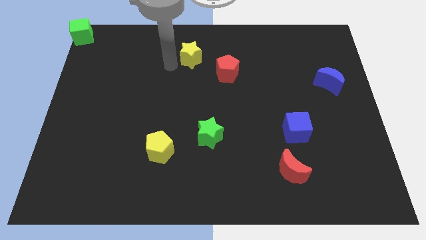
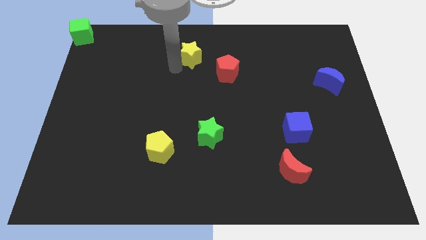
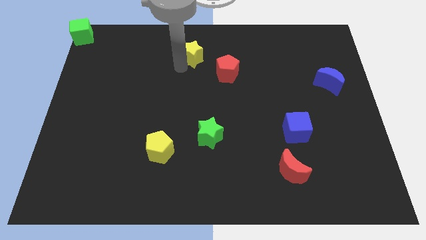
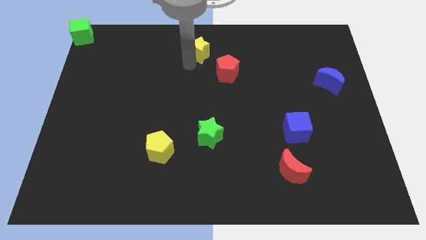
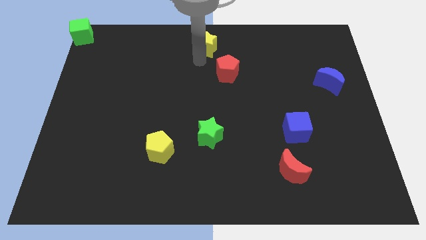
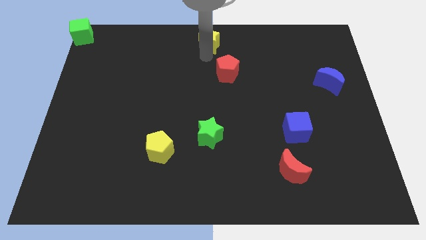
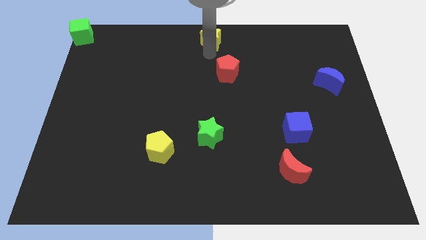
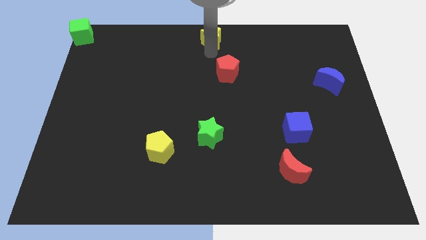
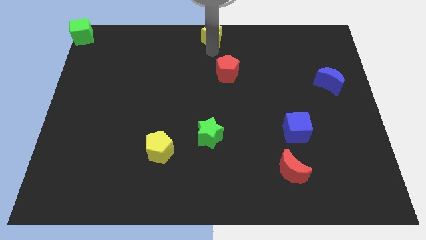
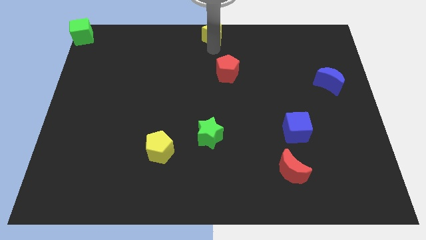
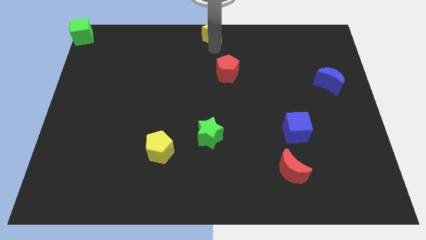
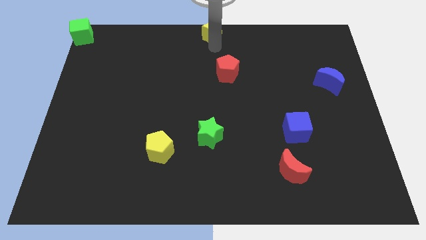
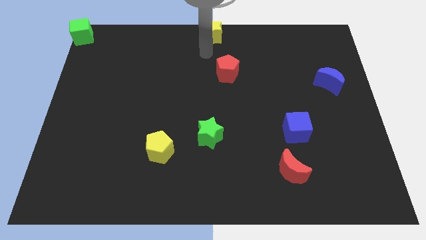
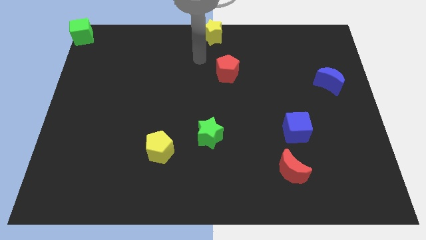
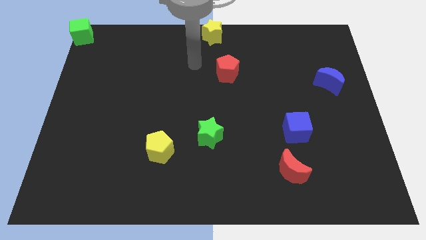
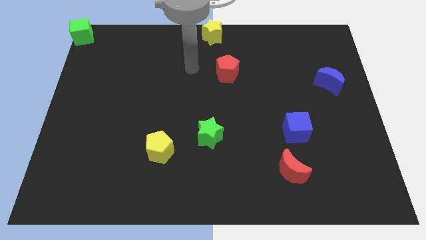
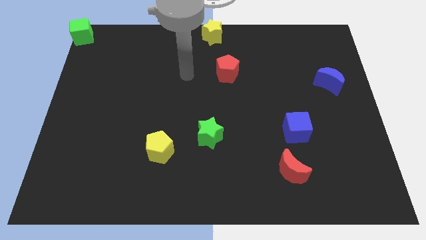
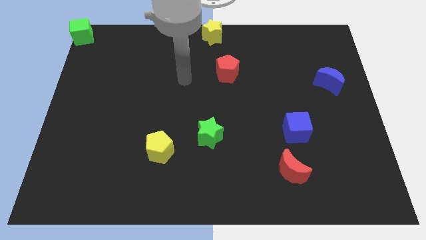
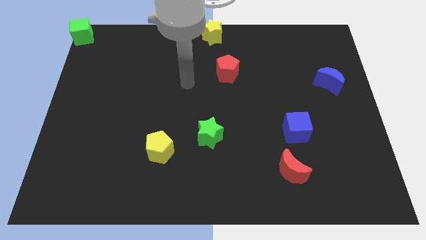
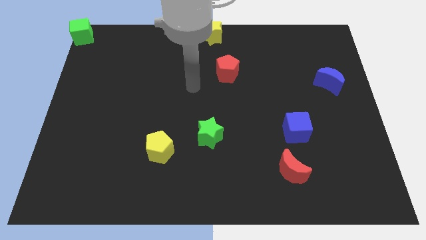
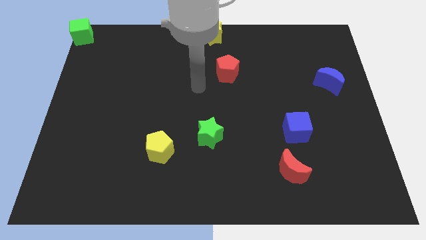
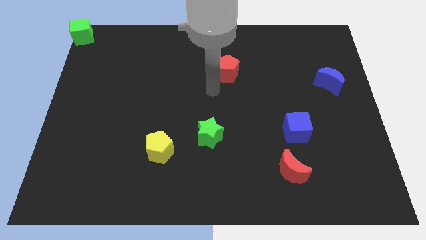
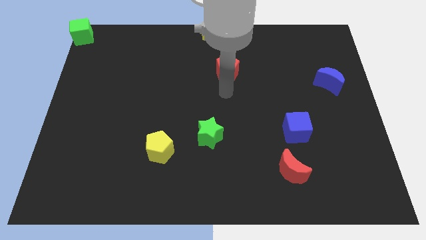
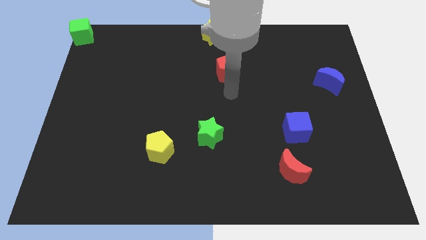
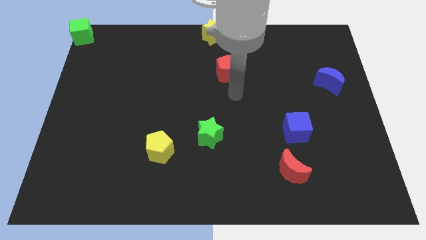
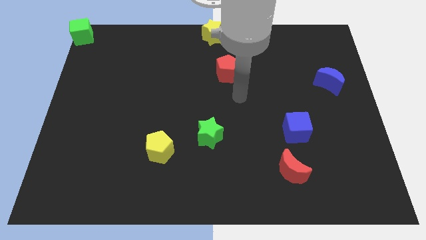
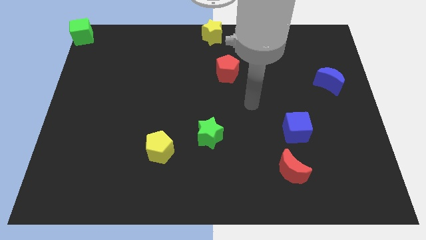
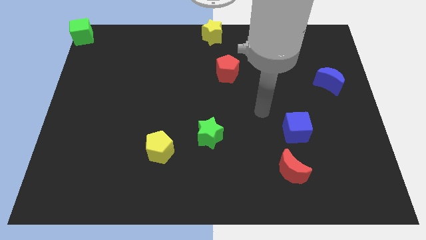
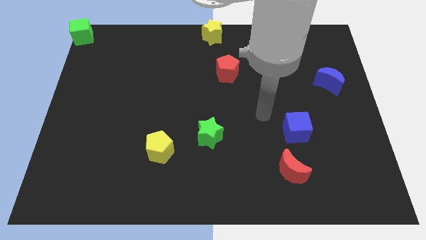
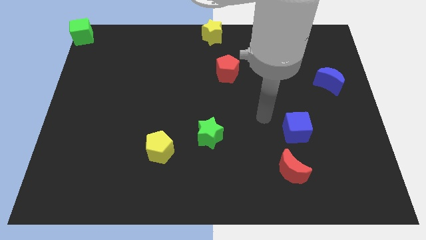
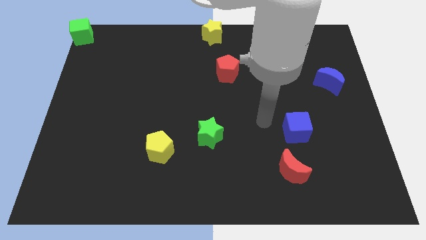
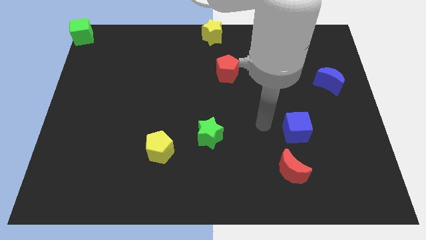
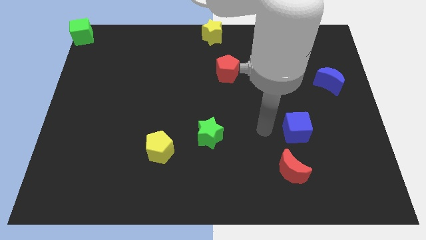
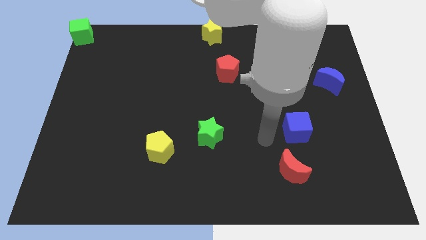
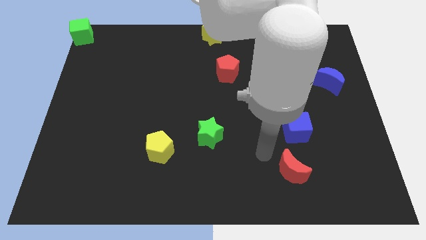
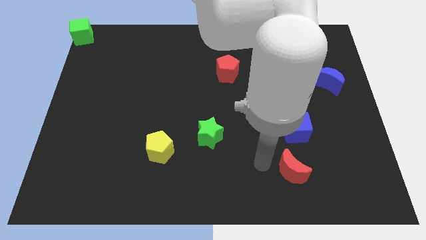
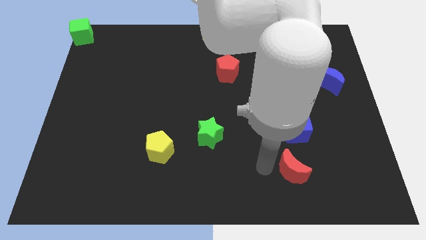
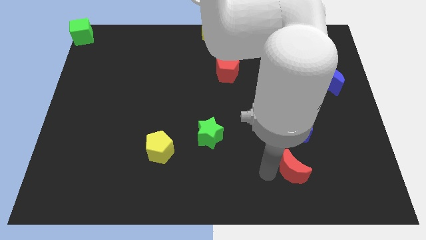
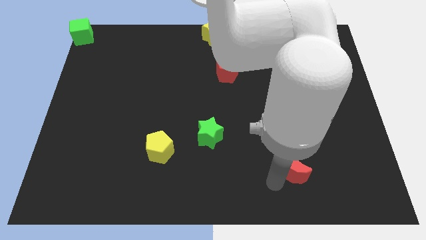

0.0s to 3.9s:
place the yellow star to the top center of the board

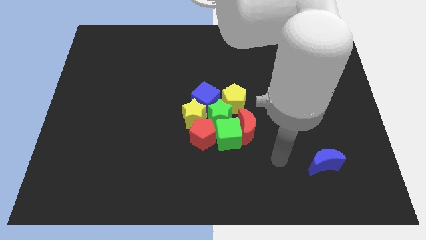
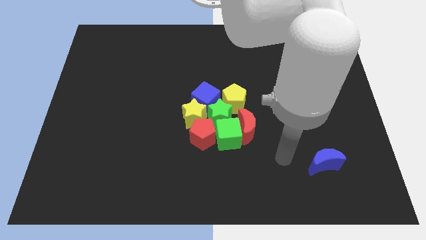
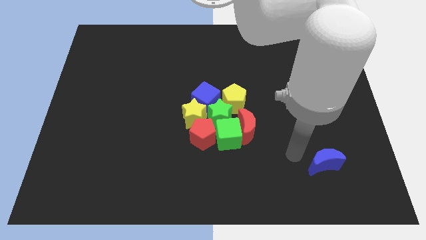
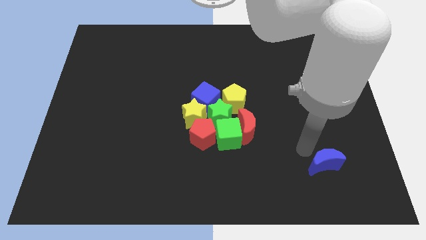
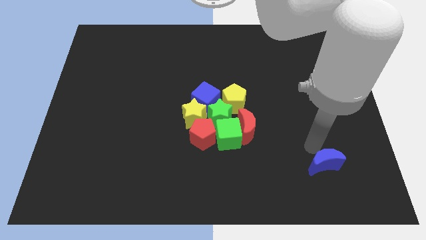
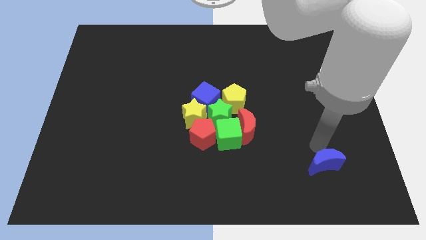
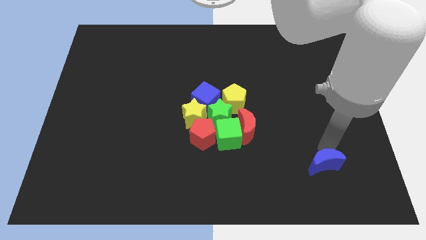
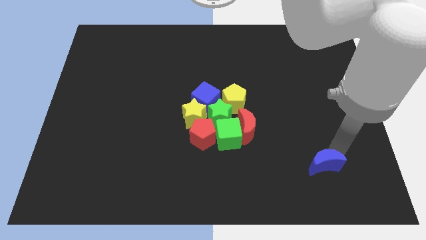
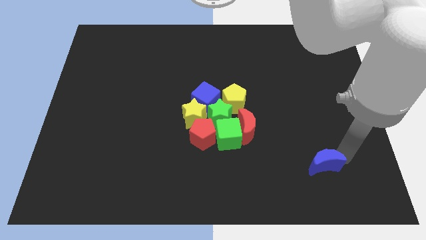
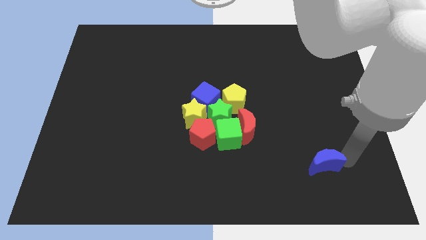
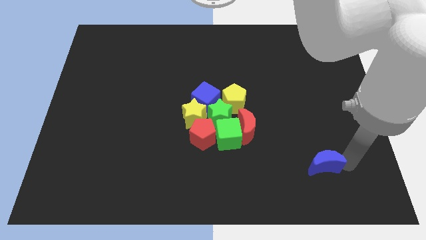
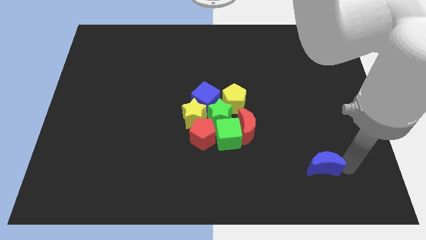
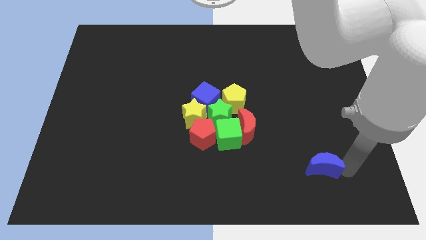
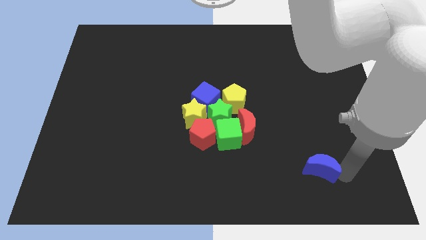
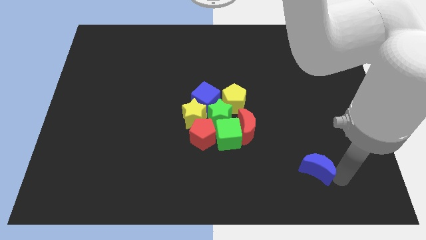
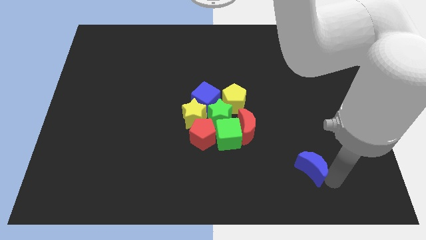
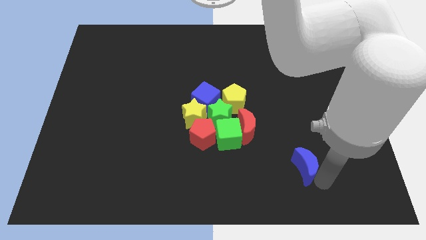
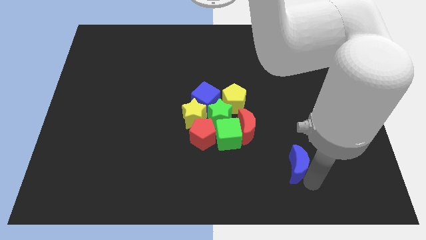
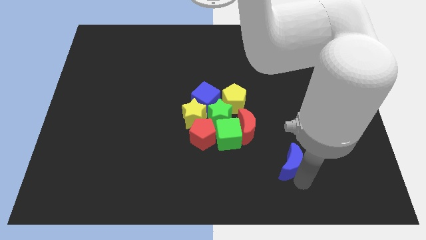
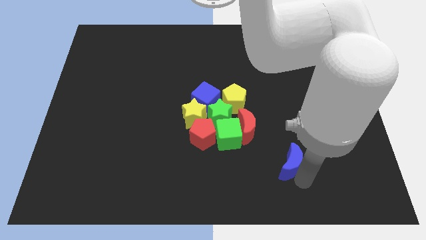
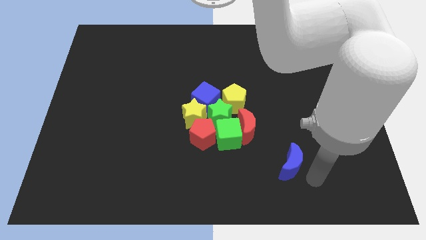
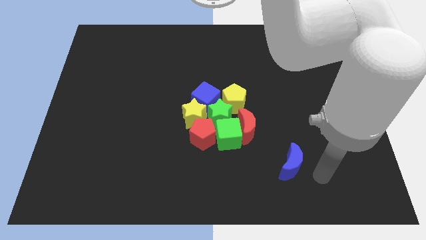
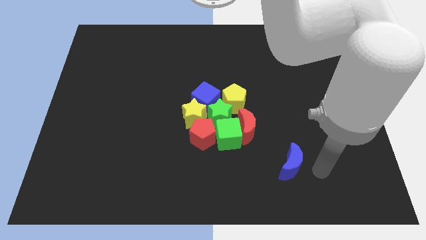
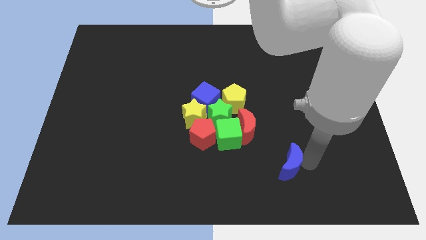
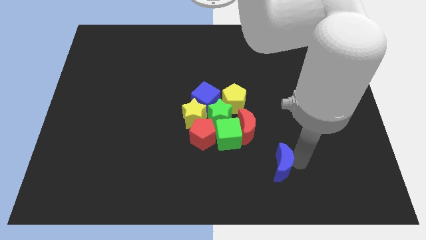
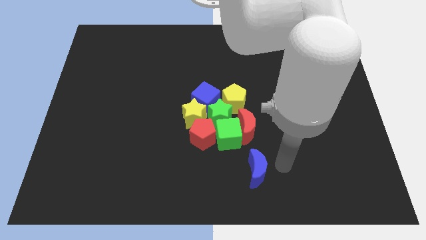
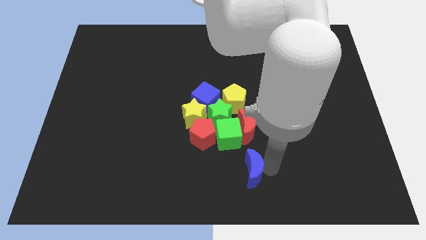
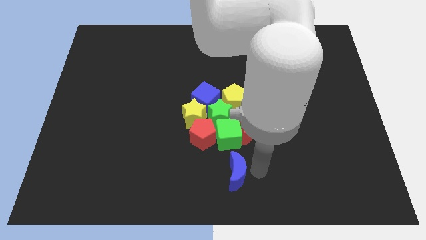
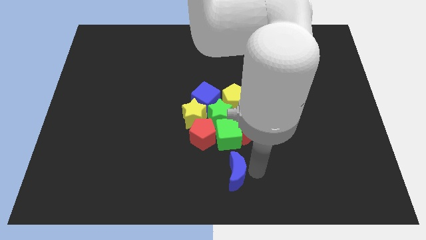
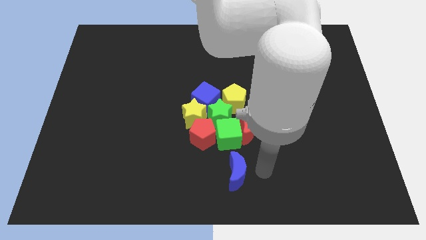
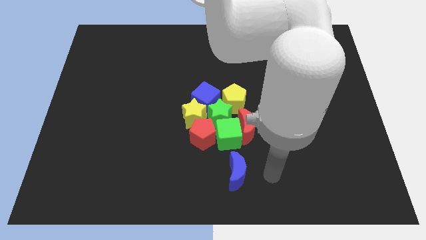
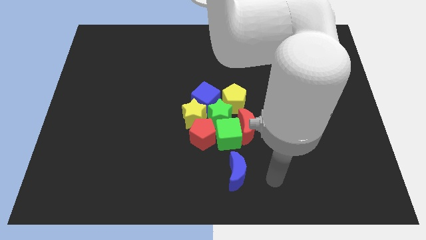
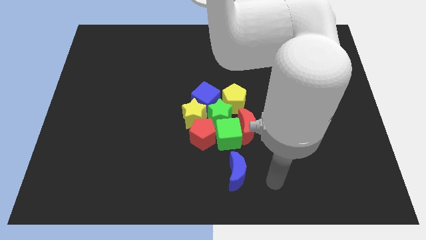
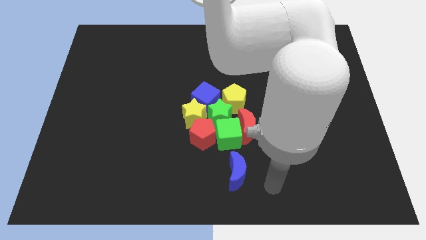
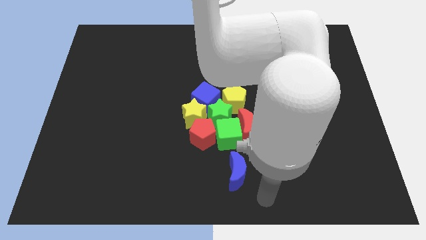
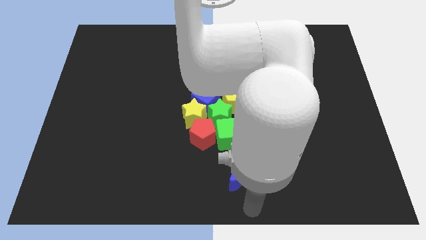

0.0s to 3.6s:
put the blue moon below the green cube

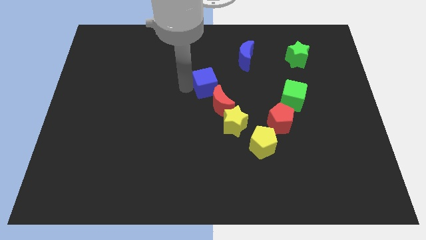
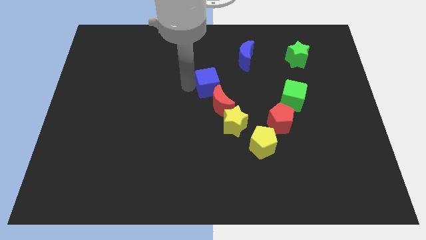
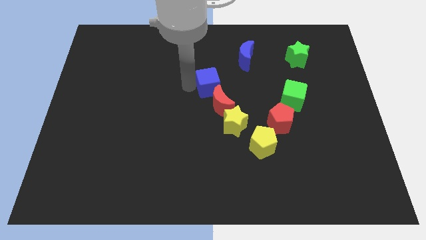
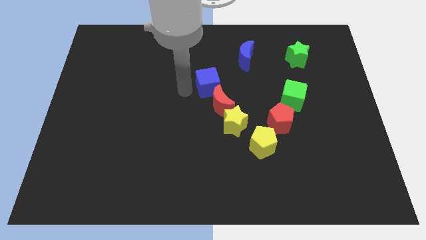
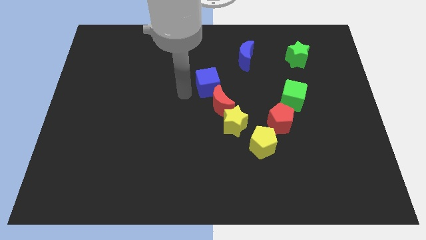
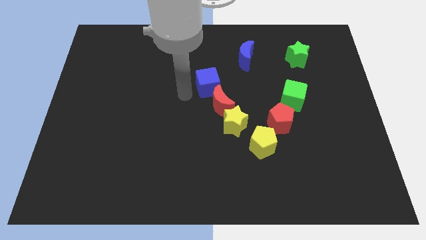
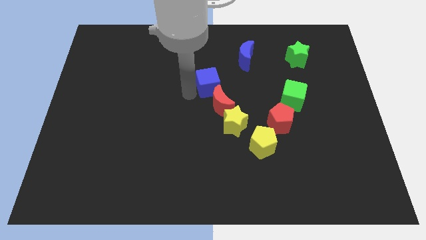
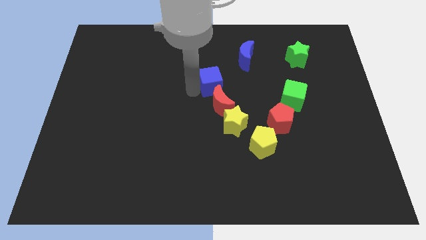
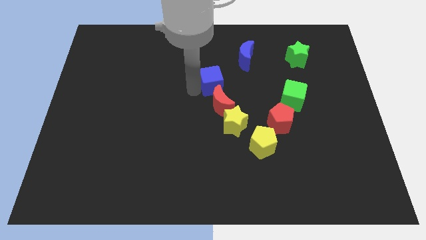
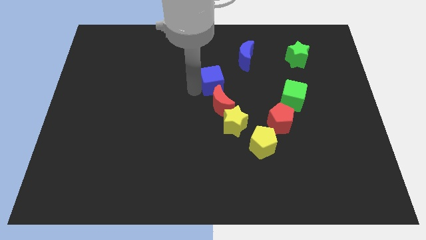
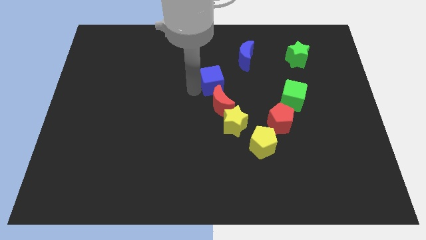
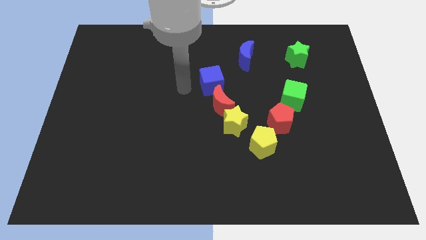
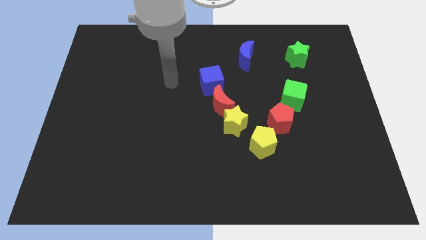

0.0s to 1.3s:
place the blue cube to the top left to the red crescent
